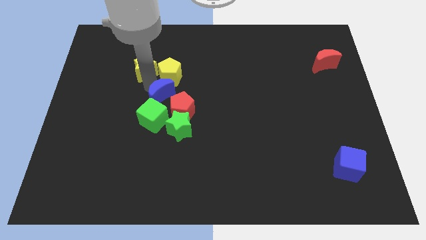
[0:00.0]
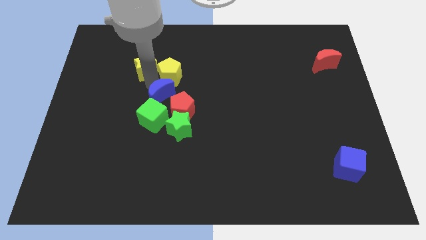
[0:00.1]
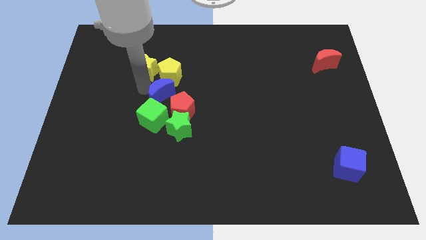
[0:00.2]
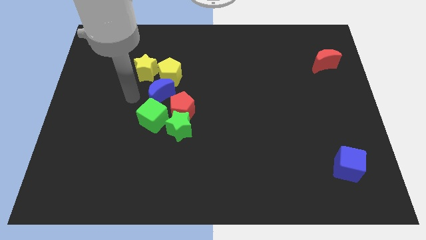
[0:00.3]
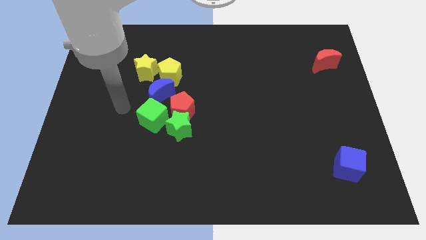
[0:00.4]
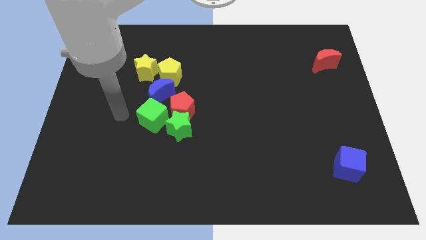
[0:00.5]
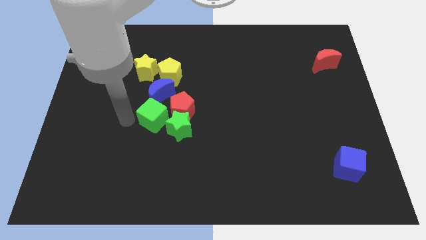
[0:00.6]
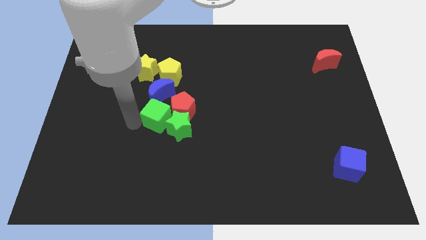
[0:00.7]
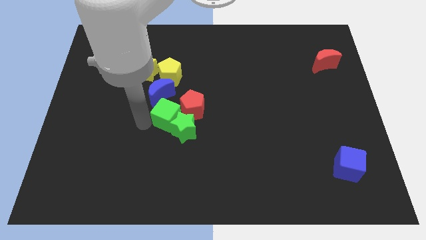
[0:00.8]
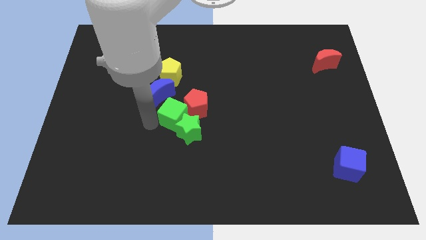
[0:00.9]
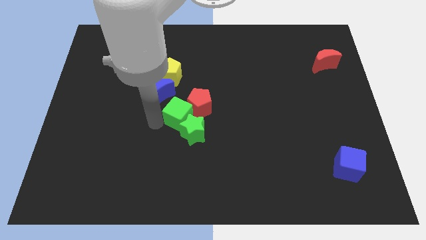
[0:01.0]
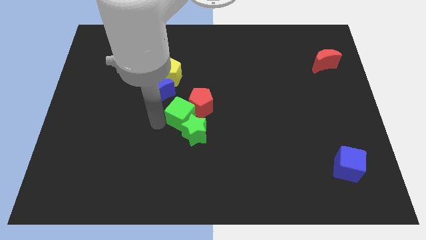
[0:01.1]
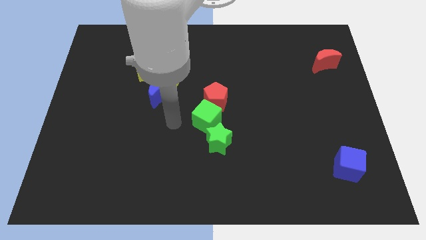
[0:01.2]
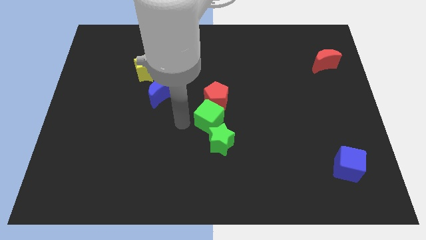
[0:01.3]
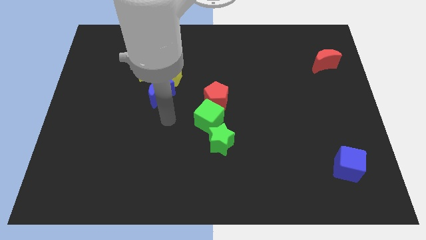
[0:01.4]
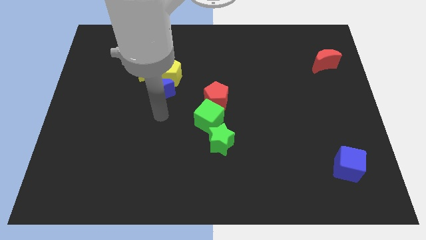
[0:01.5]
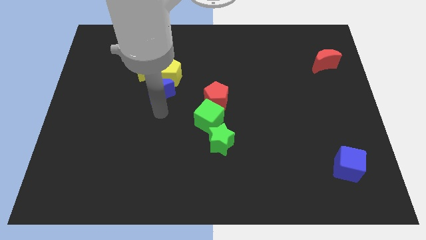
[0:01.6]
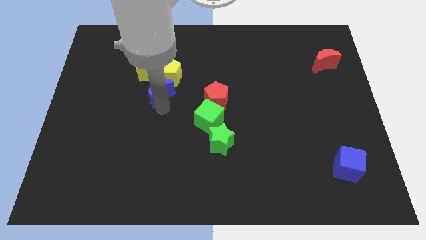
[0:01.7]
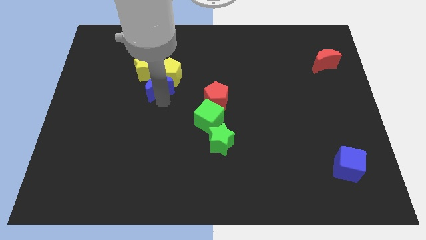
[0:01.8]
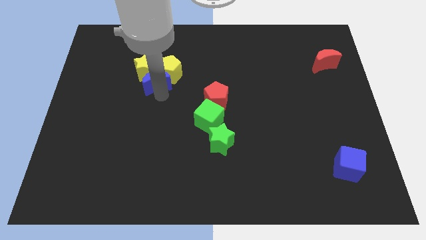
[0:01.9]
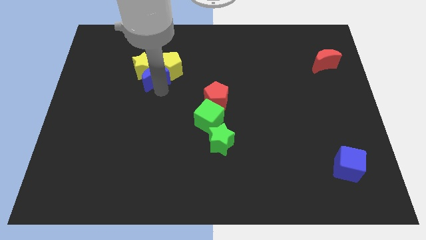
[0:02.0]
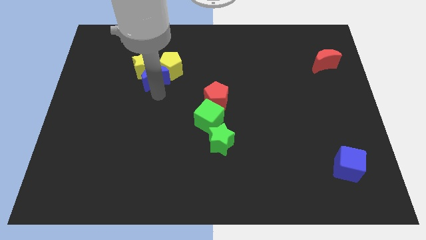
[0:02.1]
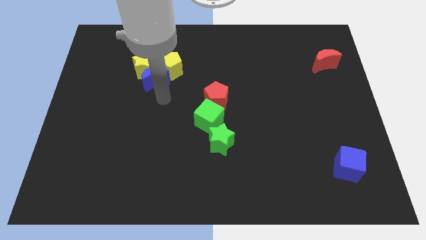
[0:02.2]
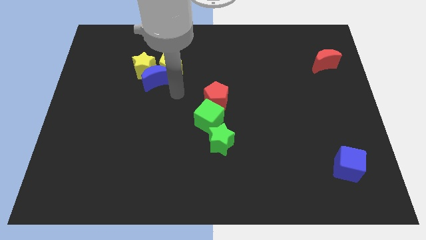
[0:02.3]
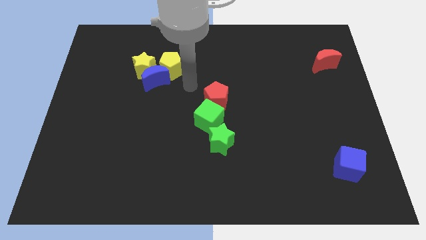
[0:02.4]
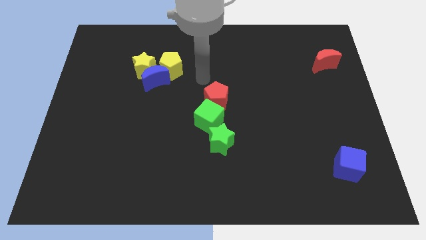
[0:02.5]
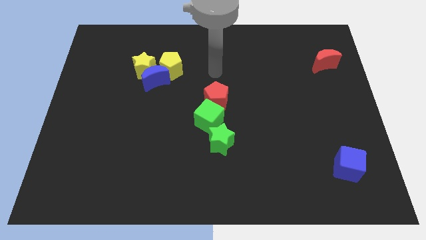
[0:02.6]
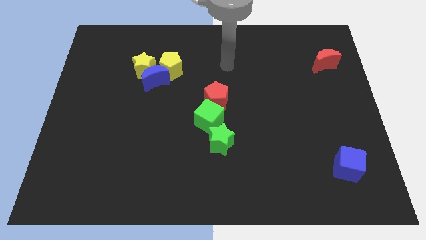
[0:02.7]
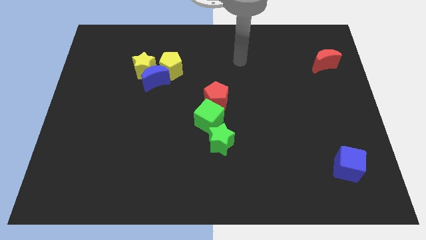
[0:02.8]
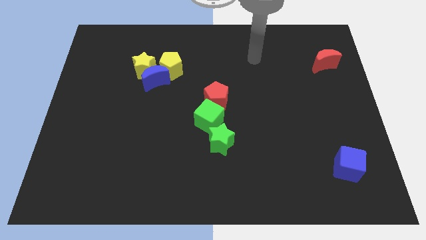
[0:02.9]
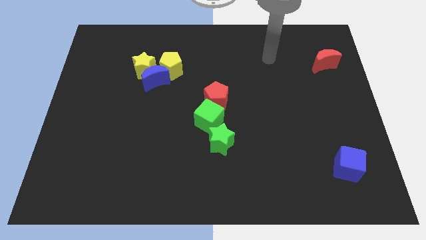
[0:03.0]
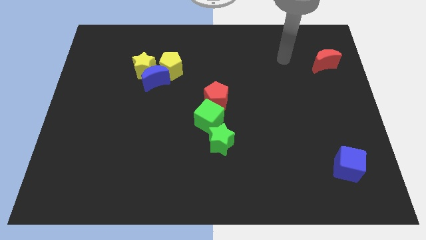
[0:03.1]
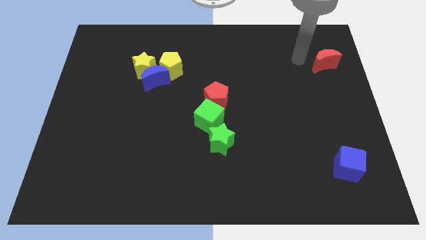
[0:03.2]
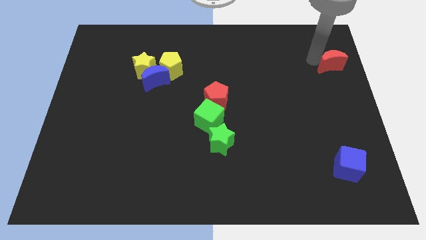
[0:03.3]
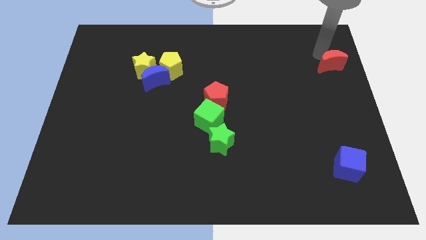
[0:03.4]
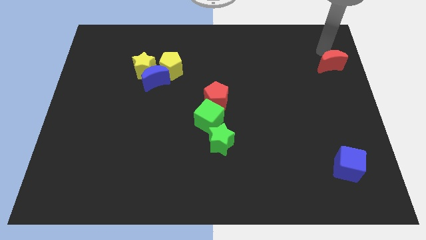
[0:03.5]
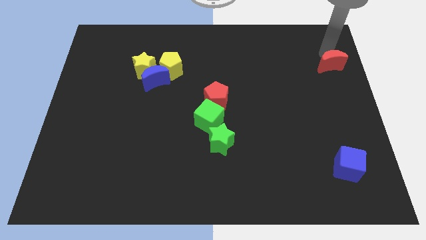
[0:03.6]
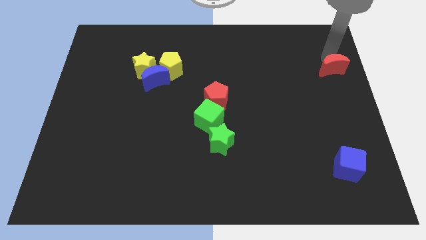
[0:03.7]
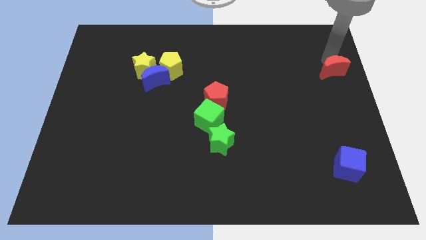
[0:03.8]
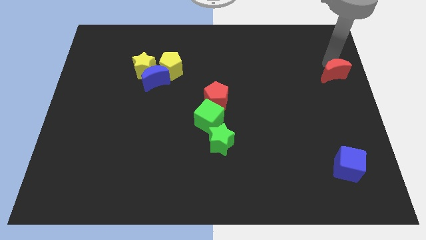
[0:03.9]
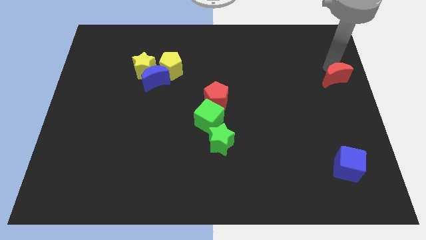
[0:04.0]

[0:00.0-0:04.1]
move your arm close to the red moon

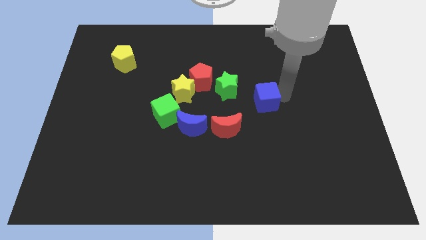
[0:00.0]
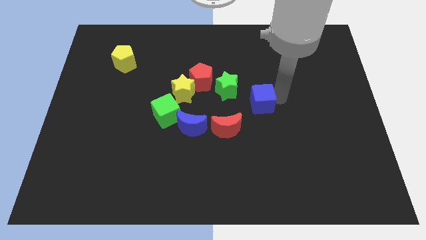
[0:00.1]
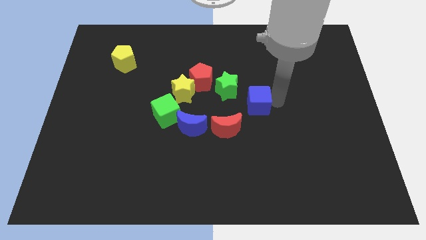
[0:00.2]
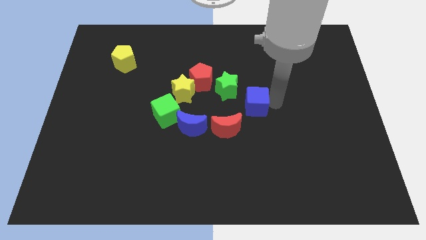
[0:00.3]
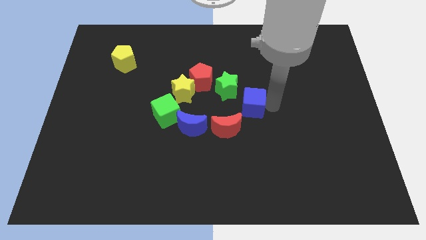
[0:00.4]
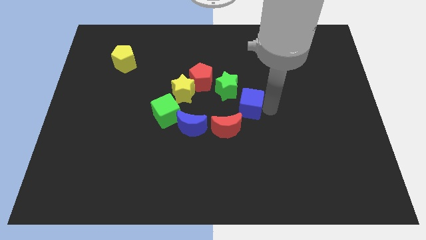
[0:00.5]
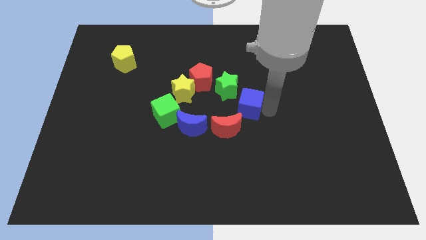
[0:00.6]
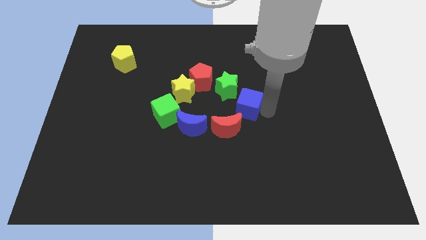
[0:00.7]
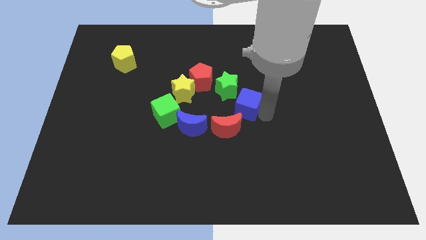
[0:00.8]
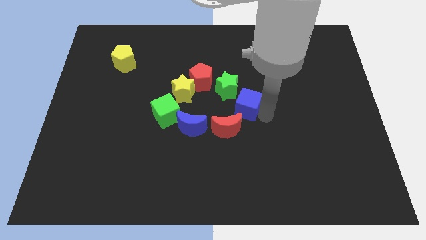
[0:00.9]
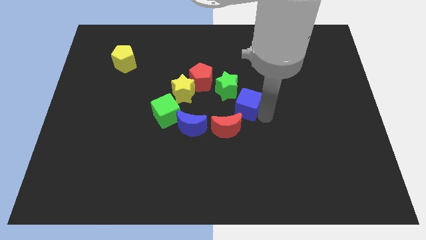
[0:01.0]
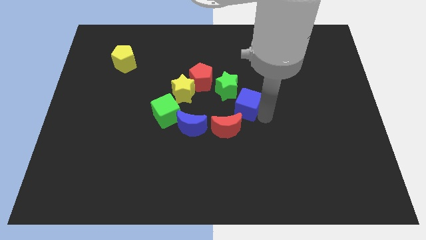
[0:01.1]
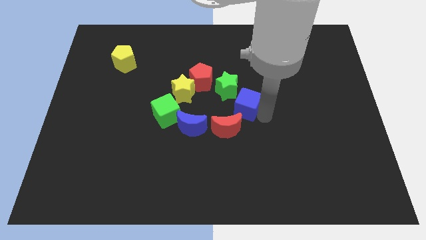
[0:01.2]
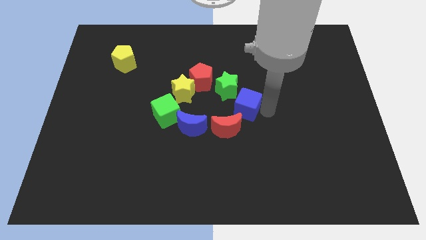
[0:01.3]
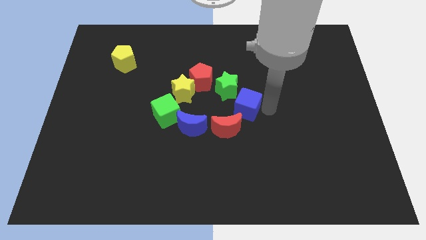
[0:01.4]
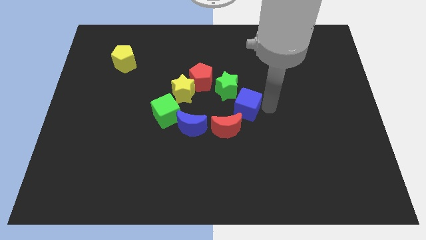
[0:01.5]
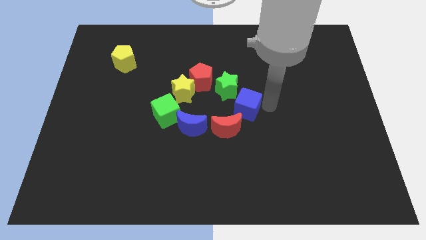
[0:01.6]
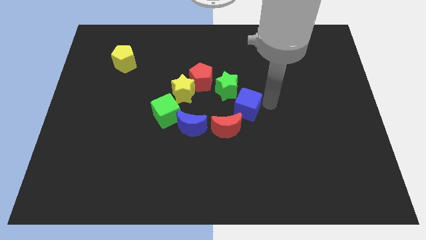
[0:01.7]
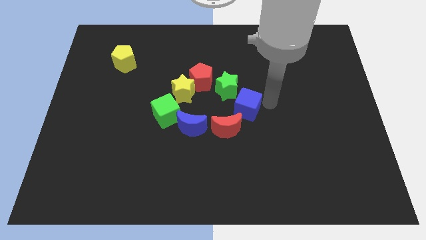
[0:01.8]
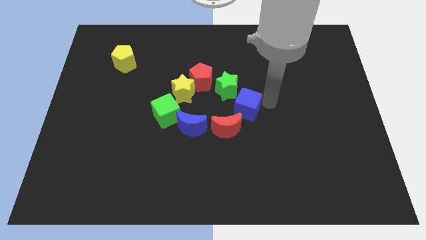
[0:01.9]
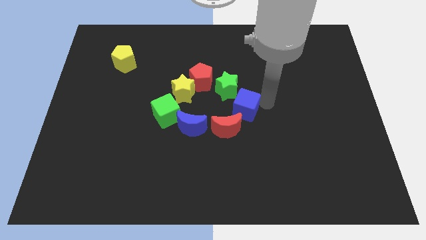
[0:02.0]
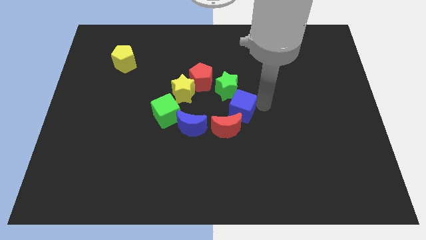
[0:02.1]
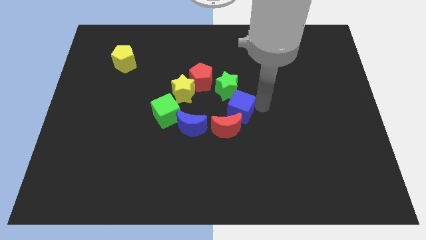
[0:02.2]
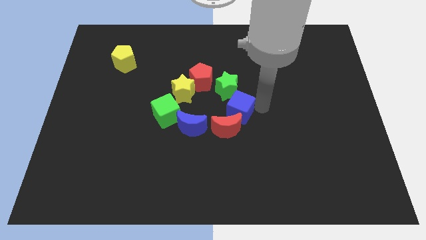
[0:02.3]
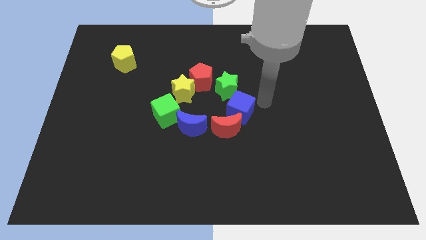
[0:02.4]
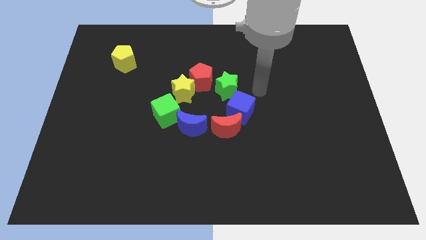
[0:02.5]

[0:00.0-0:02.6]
put the blue cube at the top of red moon

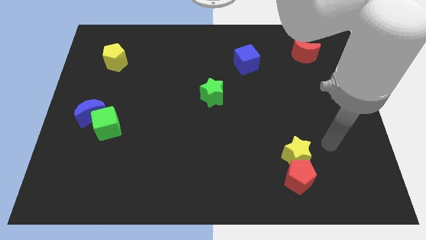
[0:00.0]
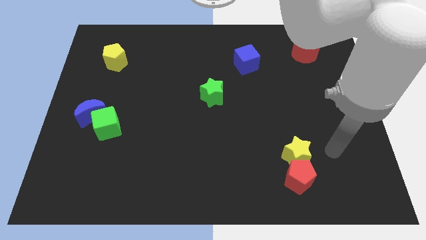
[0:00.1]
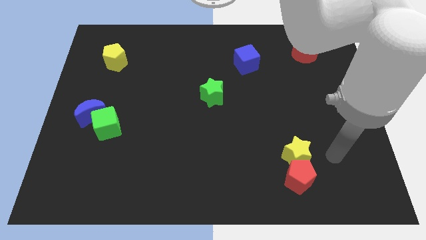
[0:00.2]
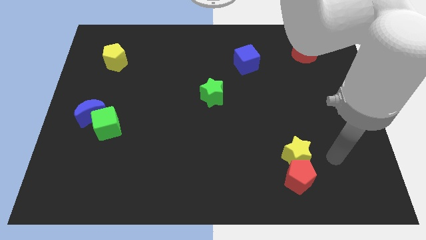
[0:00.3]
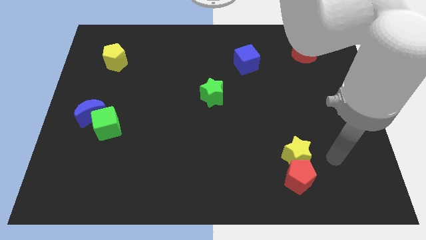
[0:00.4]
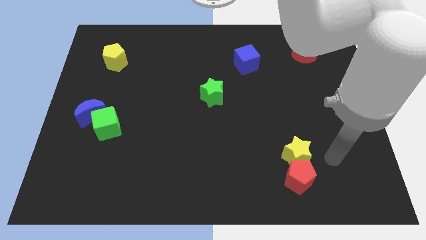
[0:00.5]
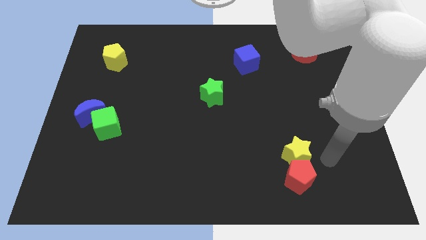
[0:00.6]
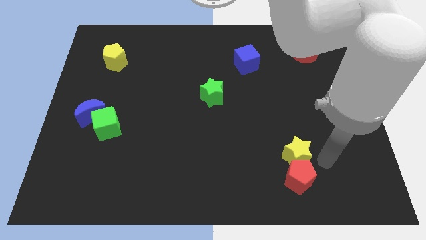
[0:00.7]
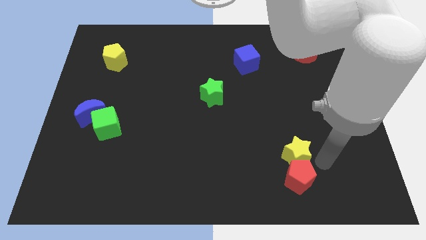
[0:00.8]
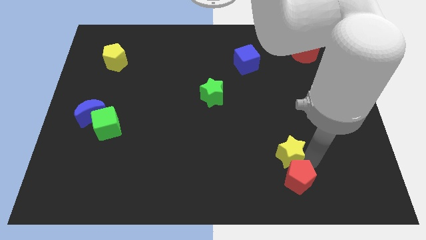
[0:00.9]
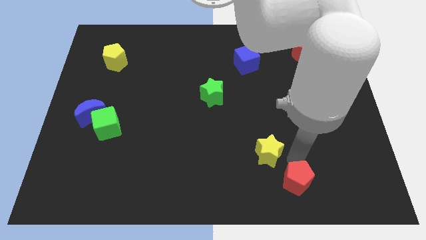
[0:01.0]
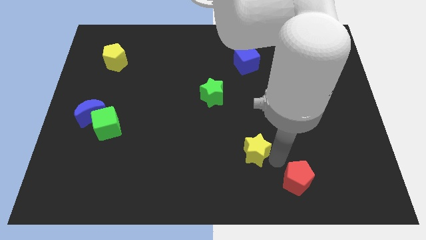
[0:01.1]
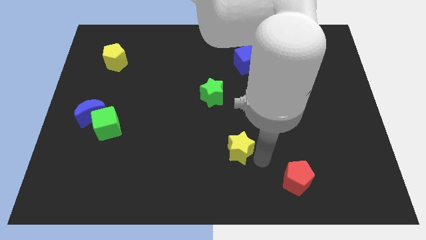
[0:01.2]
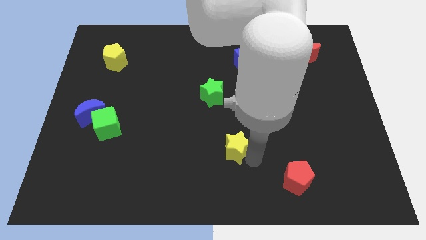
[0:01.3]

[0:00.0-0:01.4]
separate yellow star and red pentagon

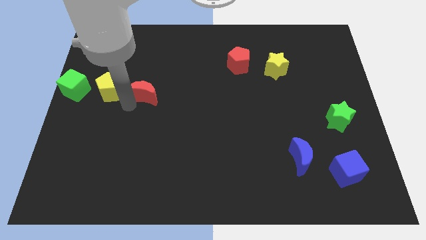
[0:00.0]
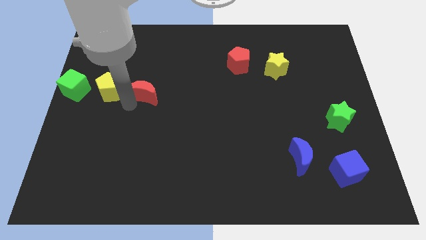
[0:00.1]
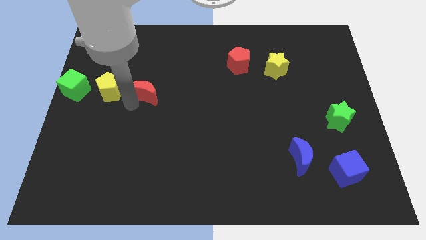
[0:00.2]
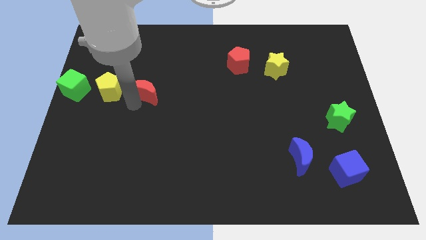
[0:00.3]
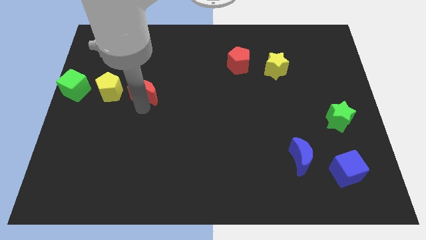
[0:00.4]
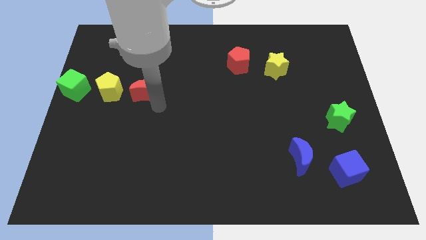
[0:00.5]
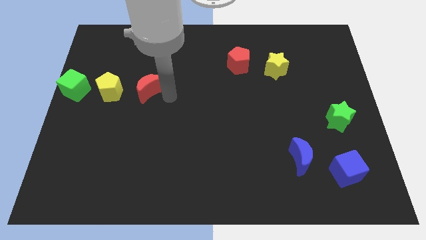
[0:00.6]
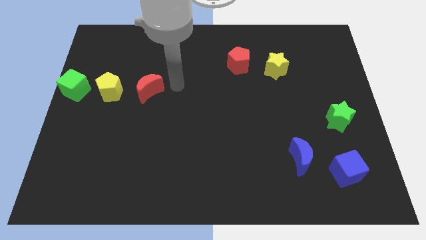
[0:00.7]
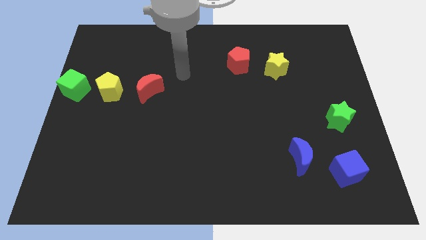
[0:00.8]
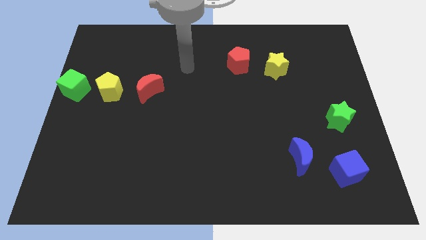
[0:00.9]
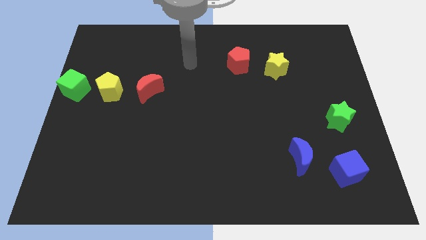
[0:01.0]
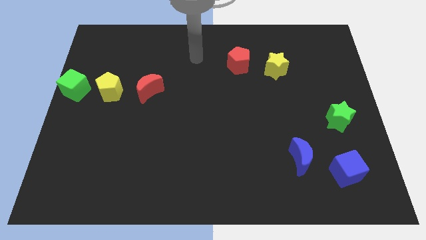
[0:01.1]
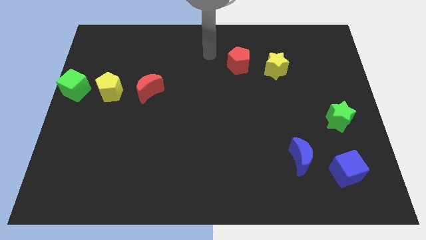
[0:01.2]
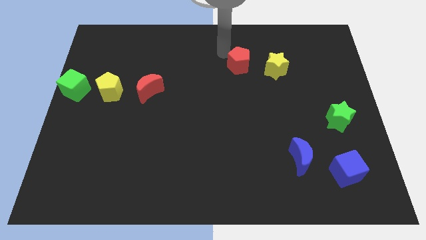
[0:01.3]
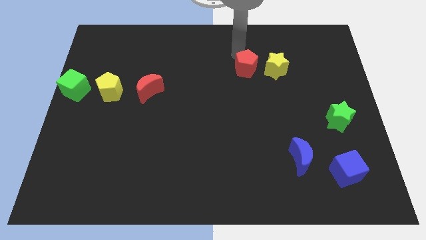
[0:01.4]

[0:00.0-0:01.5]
slightly move the red crescent to top side
